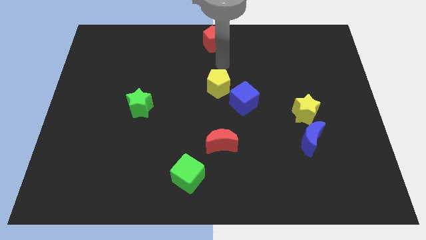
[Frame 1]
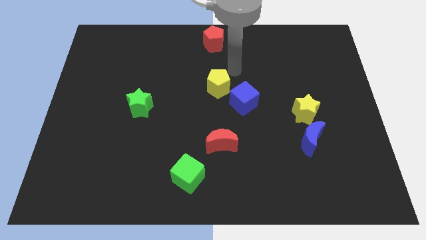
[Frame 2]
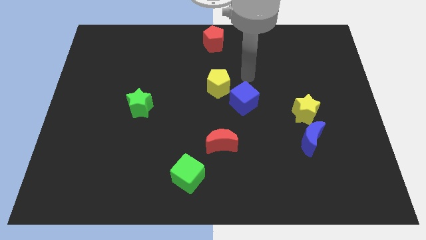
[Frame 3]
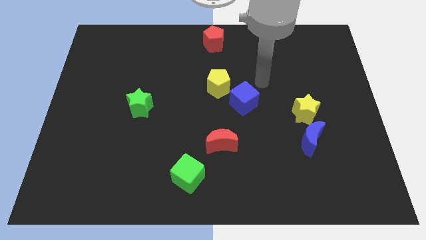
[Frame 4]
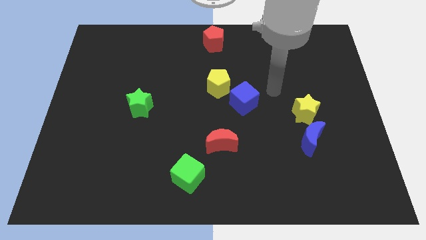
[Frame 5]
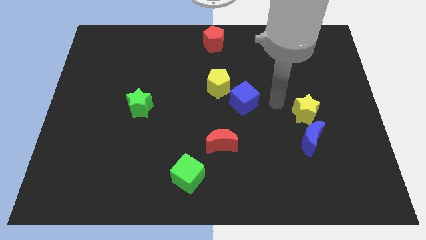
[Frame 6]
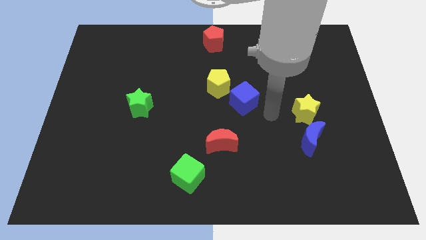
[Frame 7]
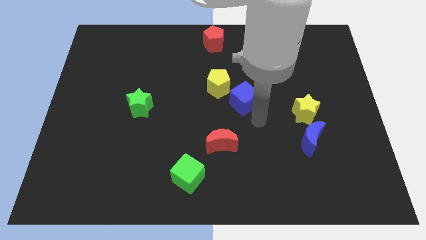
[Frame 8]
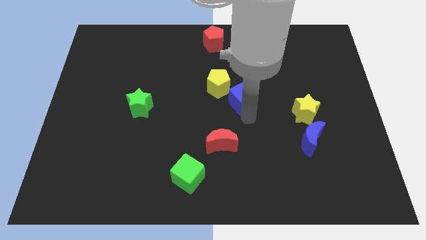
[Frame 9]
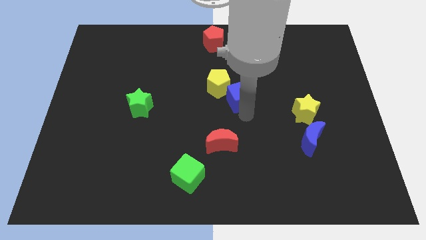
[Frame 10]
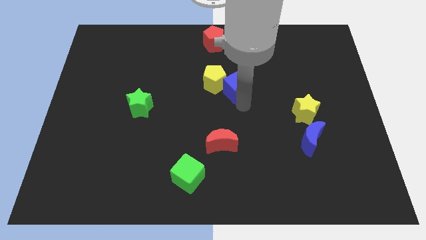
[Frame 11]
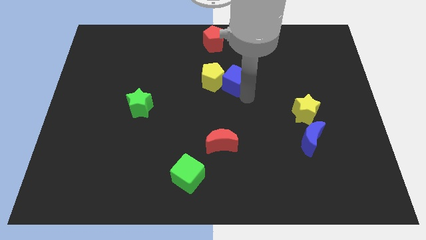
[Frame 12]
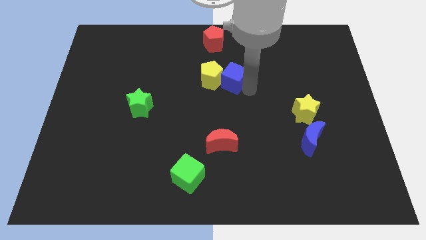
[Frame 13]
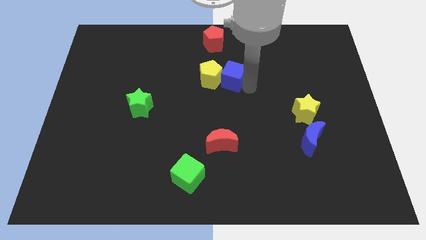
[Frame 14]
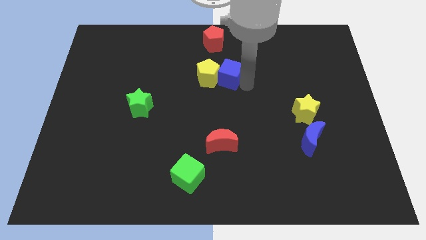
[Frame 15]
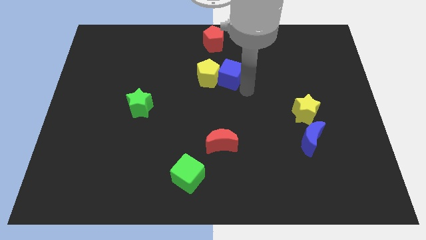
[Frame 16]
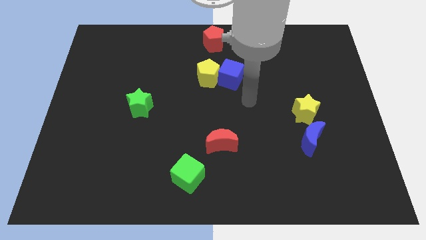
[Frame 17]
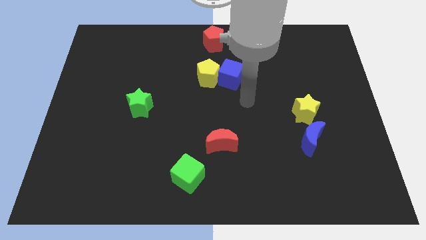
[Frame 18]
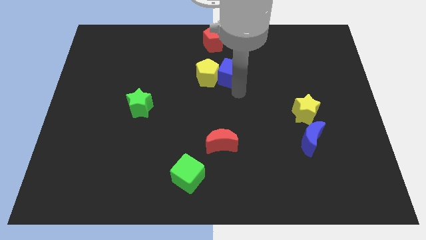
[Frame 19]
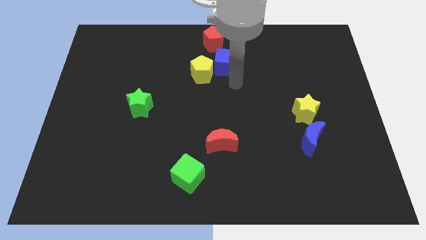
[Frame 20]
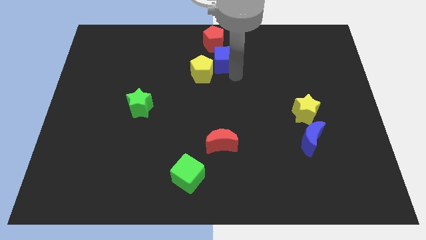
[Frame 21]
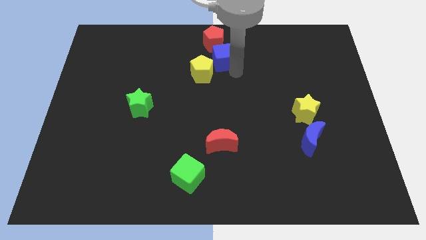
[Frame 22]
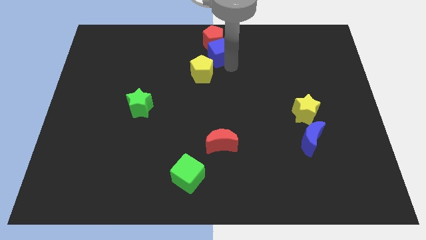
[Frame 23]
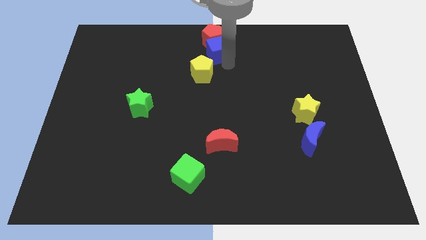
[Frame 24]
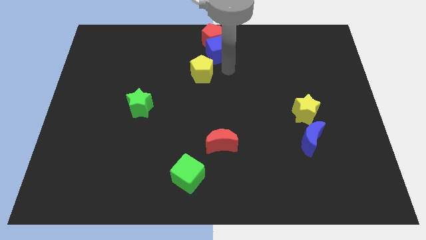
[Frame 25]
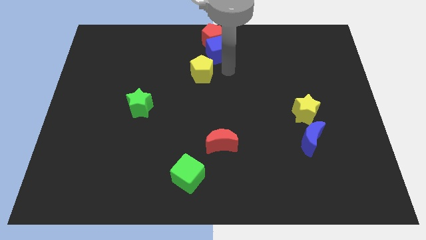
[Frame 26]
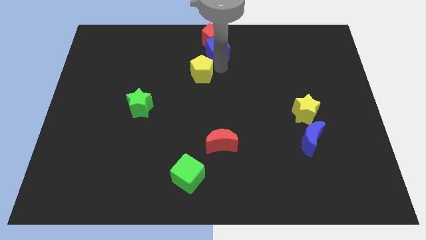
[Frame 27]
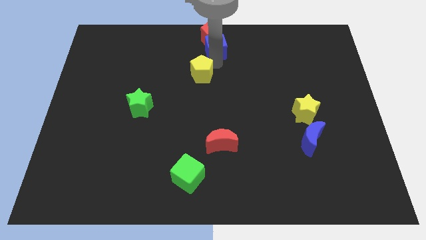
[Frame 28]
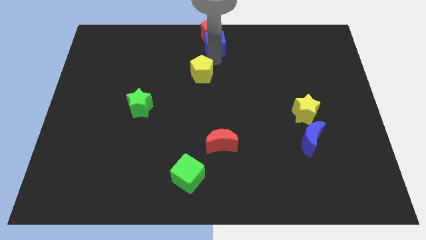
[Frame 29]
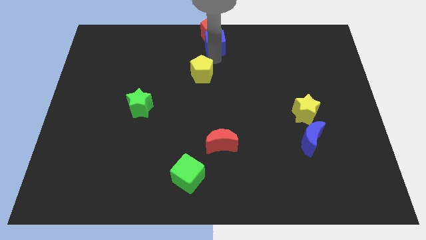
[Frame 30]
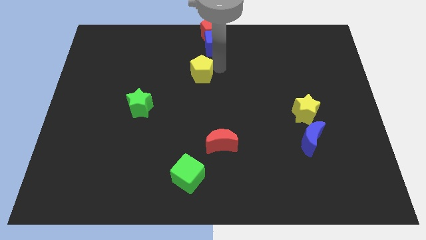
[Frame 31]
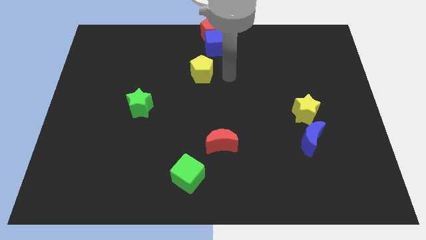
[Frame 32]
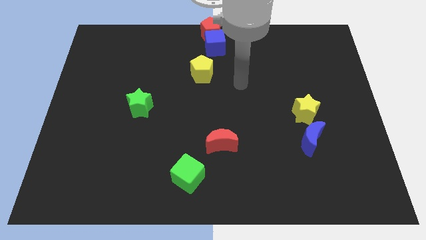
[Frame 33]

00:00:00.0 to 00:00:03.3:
push the blue cube into the red pentagon

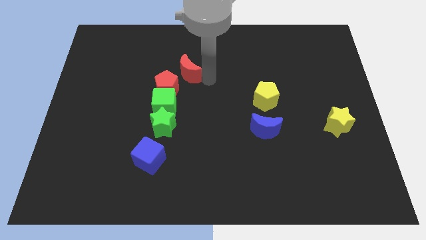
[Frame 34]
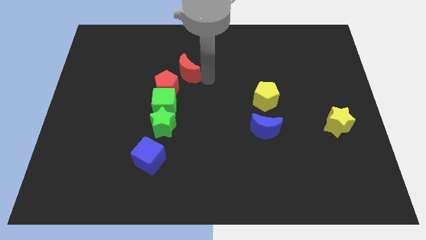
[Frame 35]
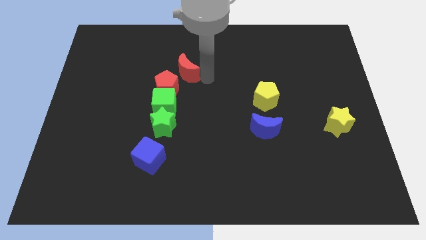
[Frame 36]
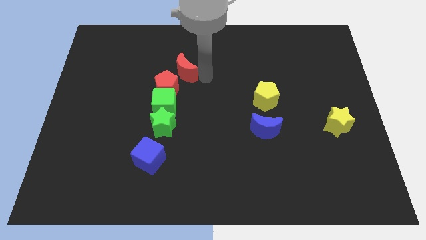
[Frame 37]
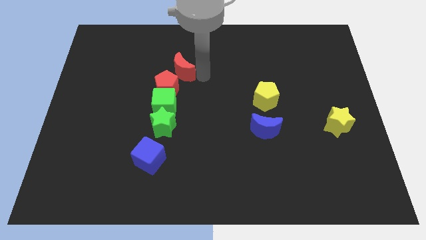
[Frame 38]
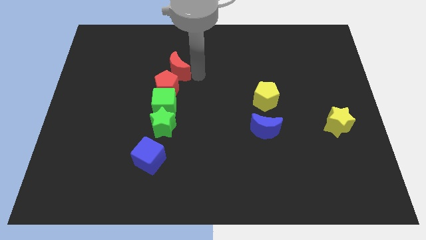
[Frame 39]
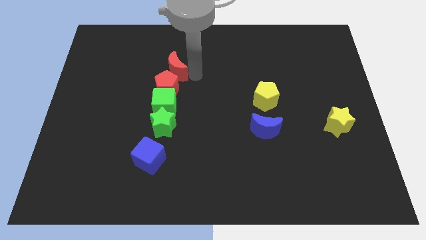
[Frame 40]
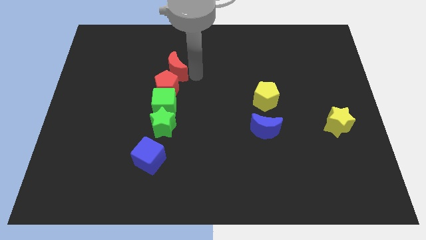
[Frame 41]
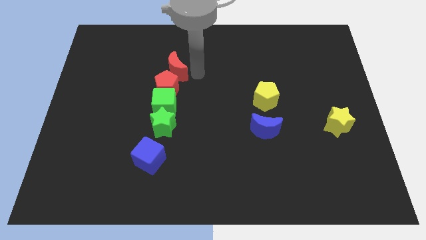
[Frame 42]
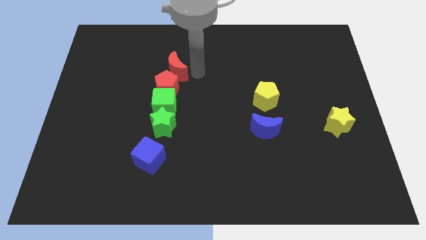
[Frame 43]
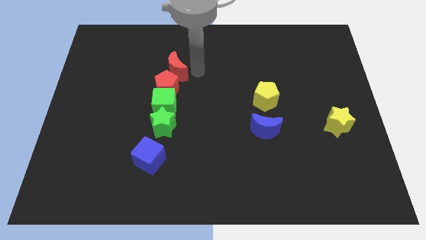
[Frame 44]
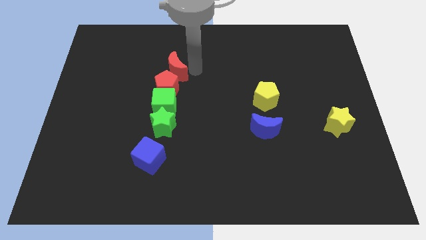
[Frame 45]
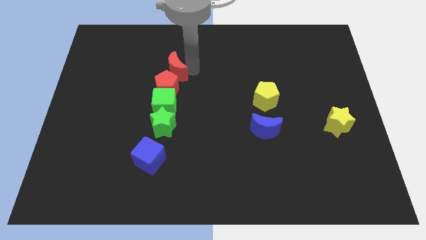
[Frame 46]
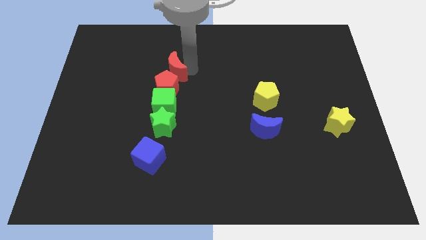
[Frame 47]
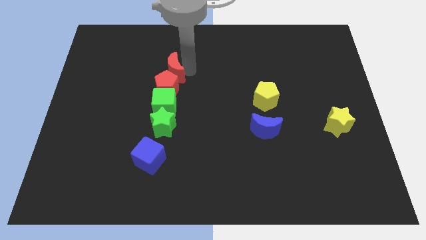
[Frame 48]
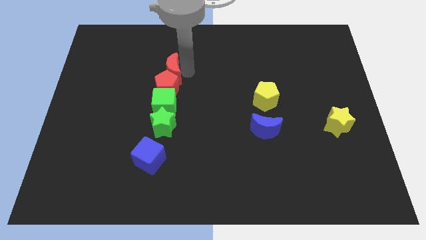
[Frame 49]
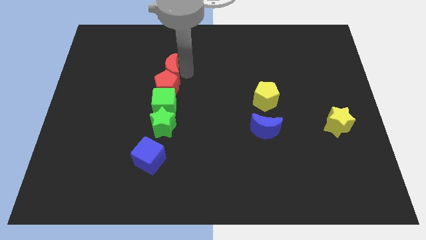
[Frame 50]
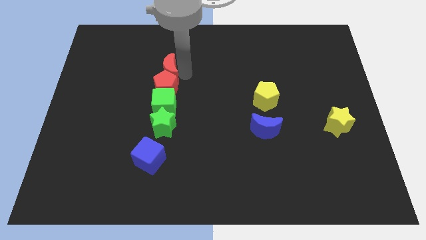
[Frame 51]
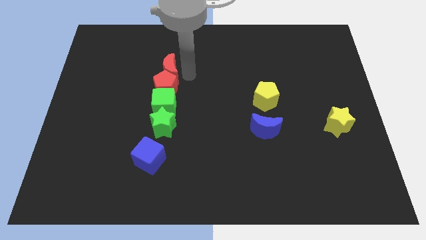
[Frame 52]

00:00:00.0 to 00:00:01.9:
push red crescent vertically above the red pentagon

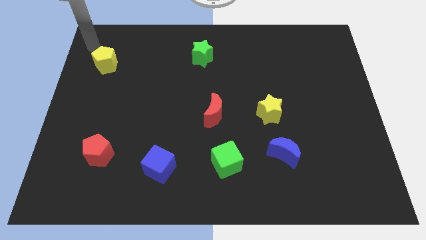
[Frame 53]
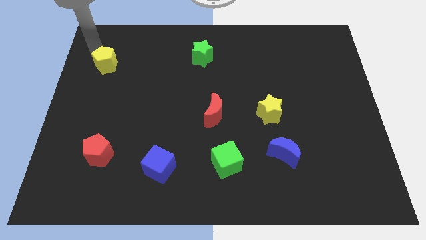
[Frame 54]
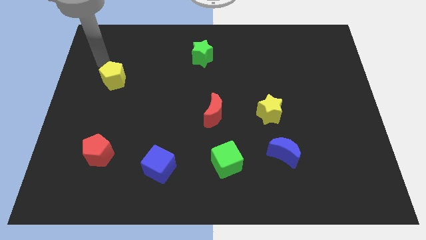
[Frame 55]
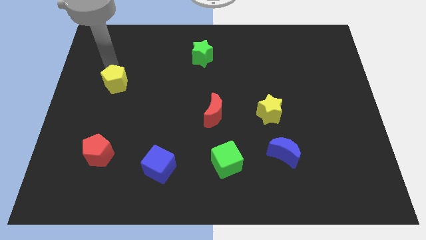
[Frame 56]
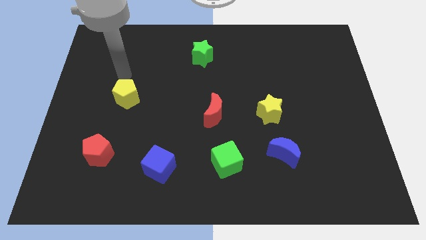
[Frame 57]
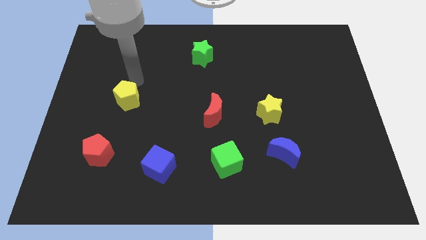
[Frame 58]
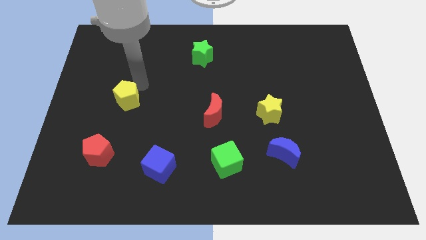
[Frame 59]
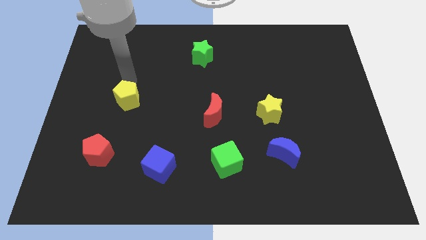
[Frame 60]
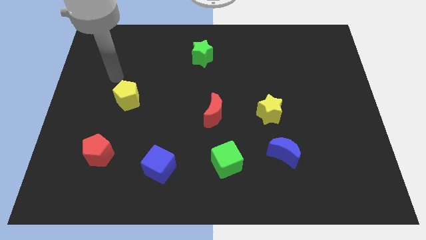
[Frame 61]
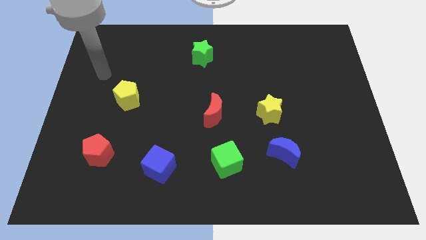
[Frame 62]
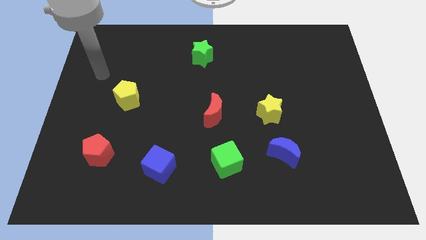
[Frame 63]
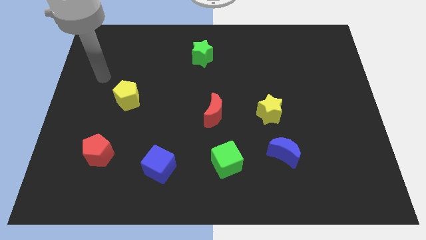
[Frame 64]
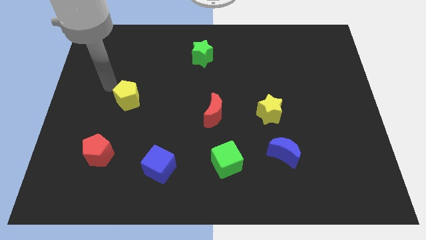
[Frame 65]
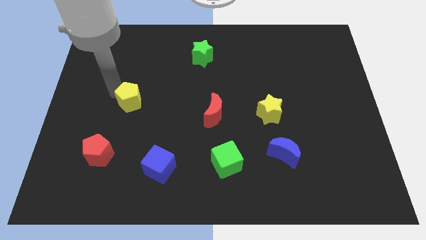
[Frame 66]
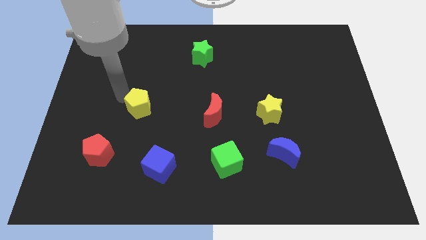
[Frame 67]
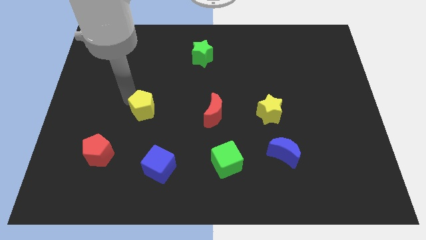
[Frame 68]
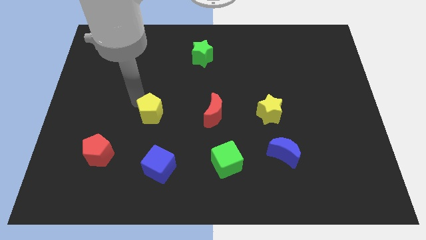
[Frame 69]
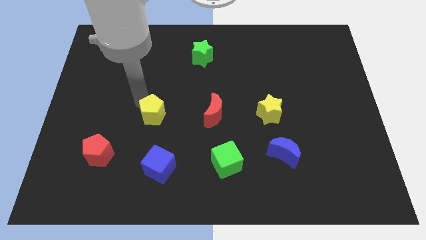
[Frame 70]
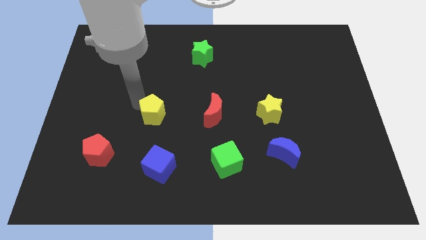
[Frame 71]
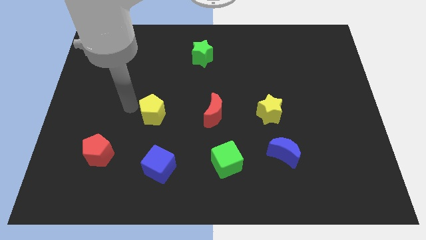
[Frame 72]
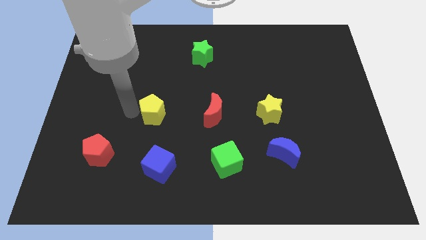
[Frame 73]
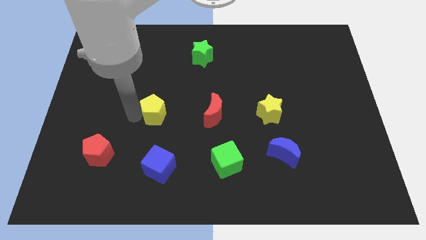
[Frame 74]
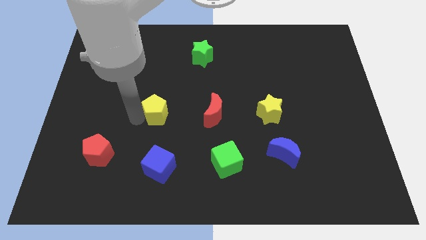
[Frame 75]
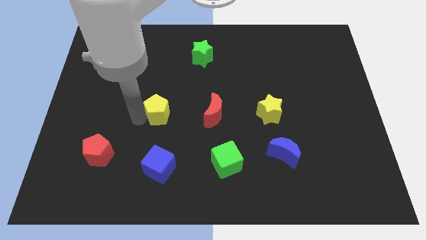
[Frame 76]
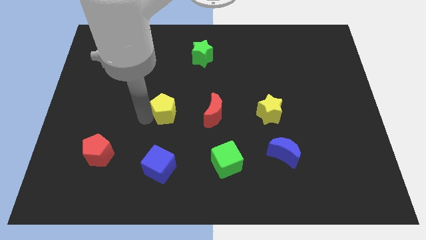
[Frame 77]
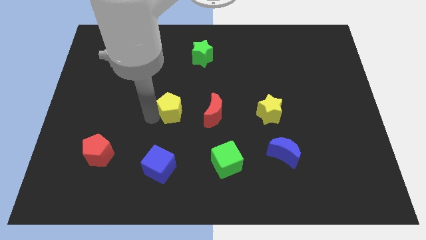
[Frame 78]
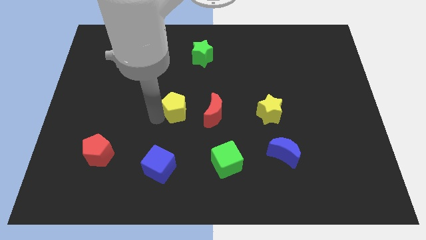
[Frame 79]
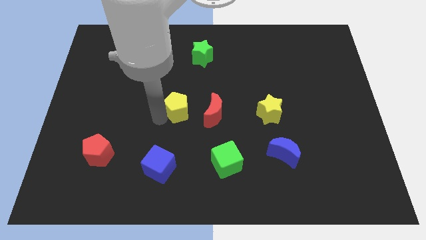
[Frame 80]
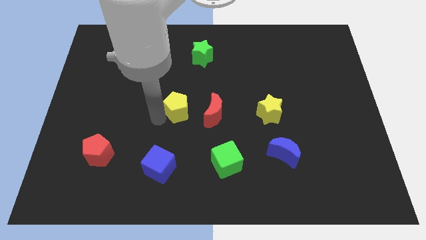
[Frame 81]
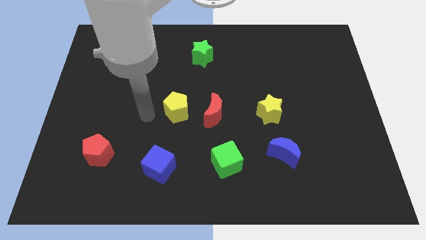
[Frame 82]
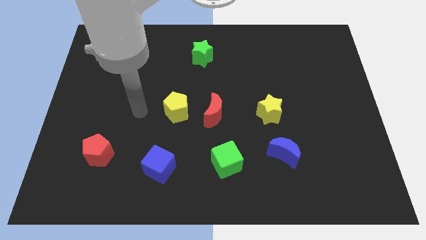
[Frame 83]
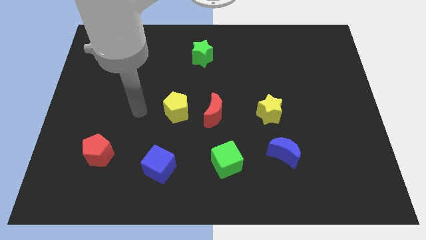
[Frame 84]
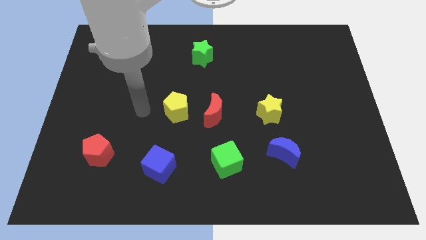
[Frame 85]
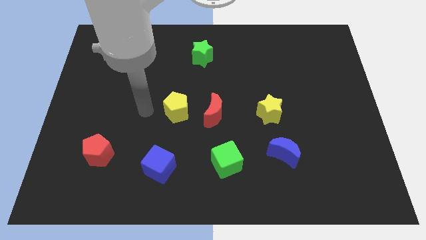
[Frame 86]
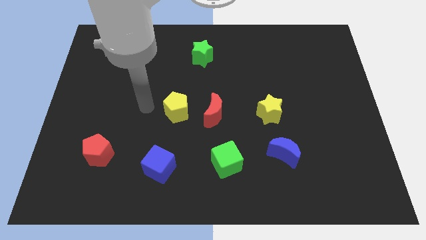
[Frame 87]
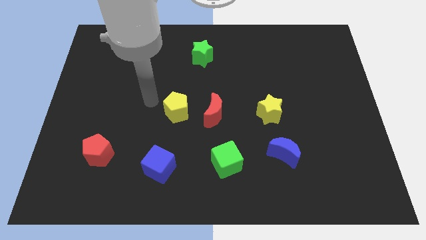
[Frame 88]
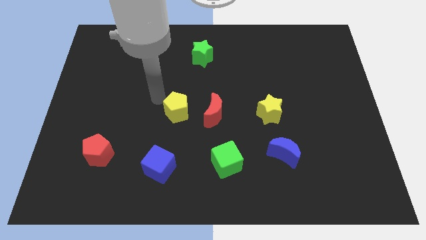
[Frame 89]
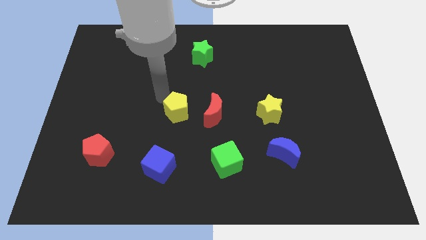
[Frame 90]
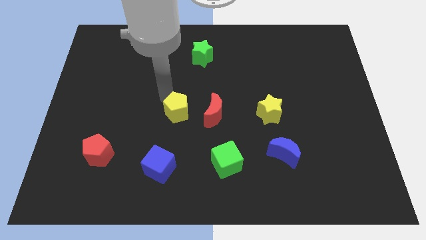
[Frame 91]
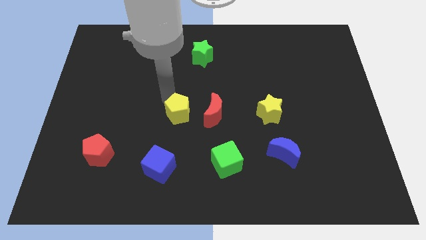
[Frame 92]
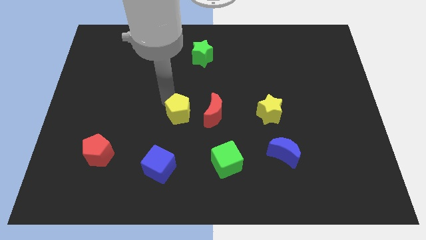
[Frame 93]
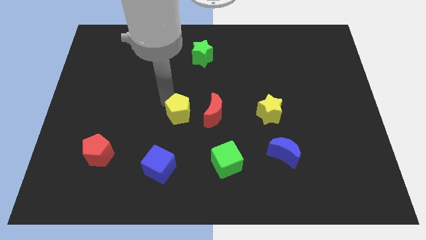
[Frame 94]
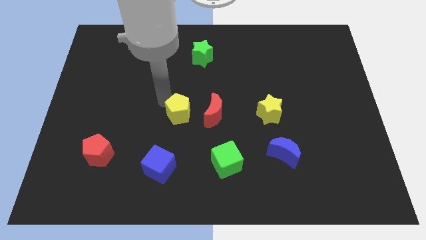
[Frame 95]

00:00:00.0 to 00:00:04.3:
slide the yellow pentagon towards the left side of the red crescent
